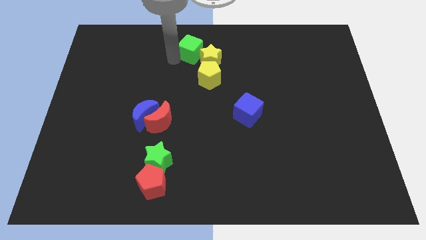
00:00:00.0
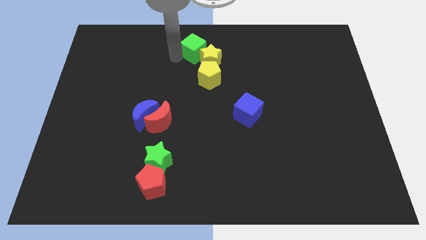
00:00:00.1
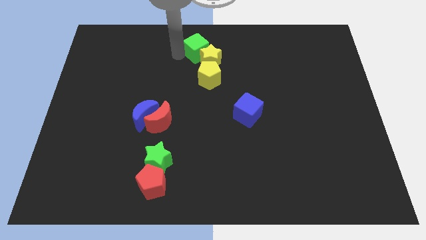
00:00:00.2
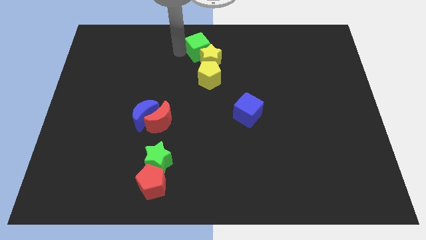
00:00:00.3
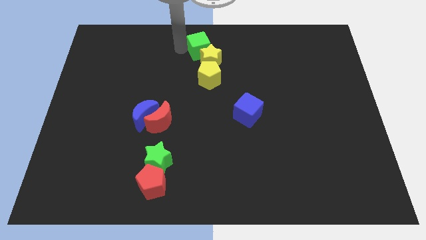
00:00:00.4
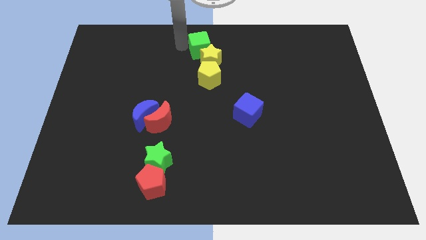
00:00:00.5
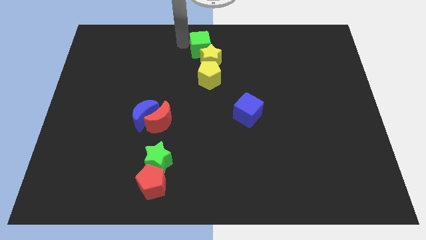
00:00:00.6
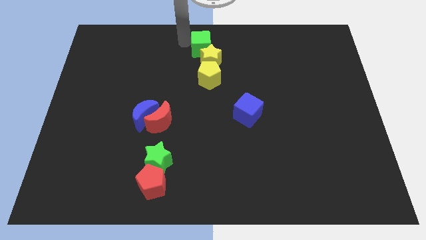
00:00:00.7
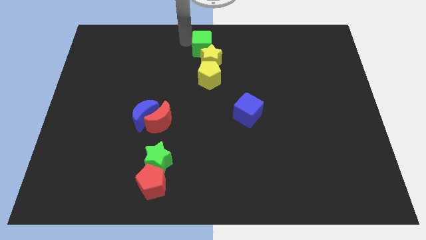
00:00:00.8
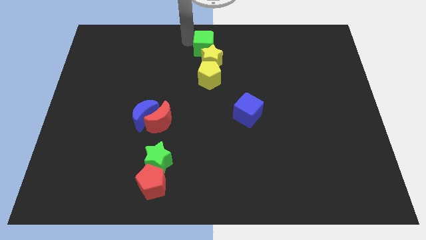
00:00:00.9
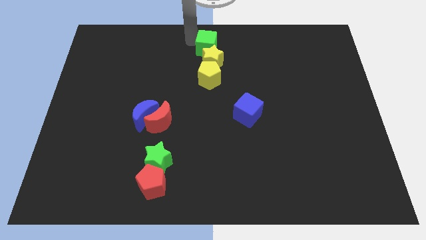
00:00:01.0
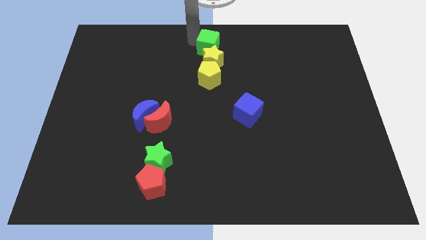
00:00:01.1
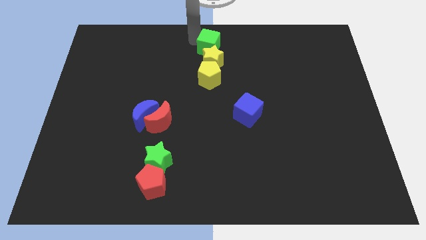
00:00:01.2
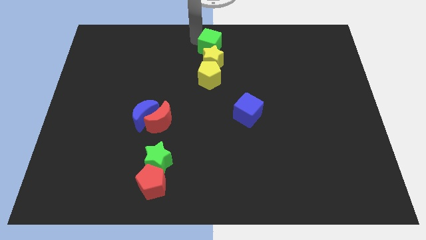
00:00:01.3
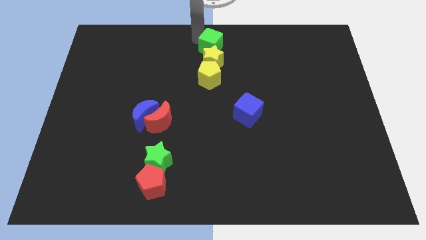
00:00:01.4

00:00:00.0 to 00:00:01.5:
put the green cube above the yellow star

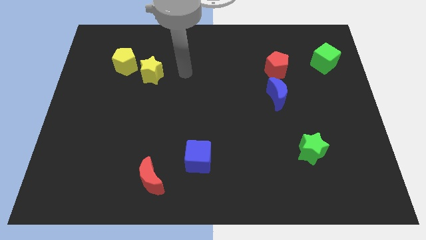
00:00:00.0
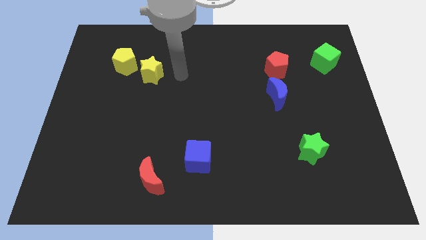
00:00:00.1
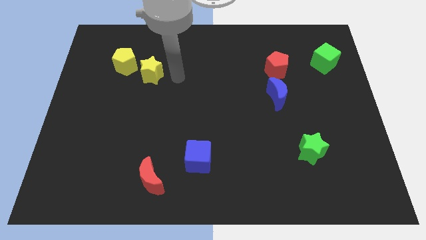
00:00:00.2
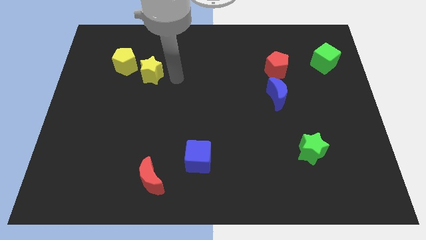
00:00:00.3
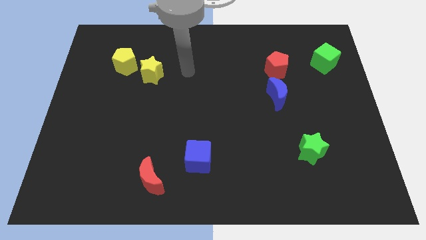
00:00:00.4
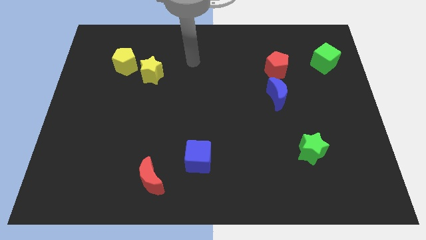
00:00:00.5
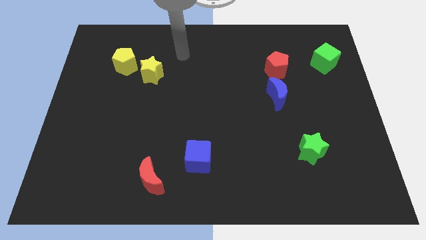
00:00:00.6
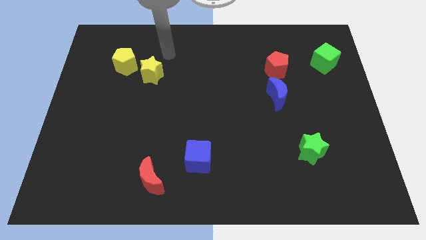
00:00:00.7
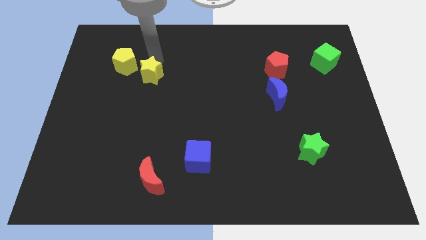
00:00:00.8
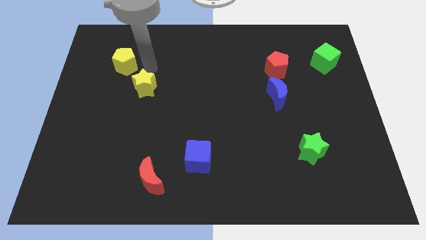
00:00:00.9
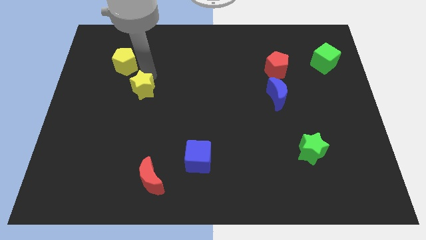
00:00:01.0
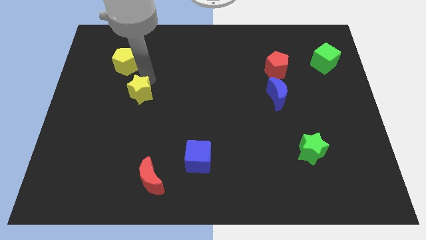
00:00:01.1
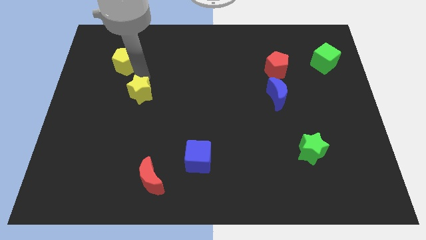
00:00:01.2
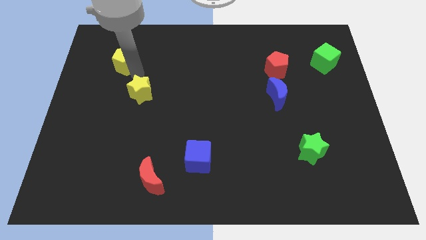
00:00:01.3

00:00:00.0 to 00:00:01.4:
slide the yellow star down slightly

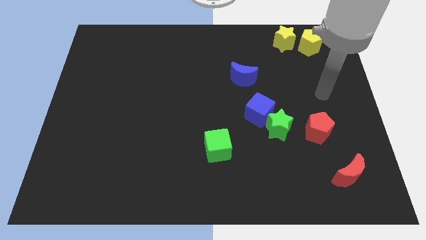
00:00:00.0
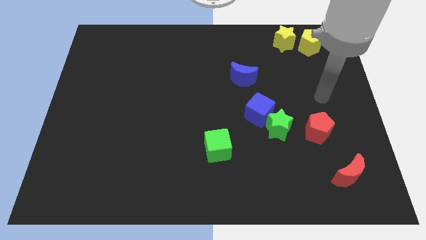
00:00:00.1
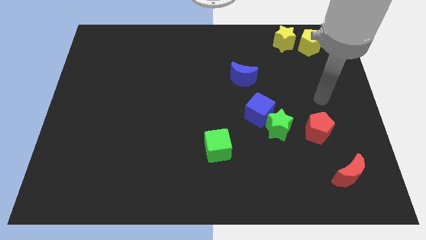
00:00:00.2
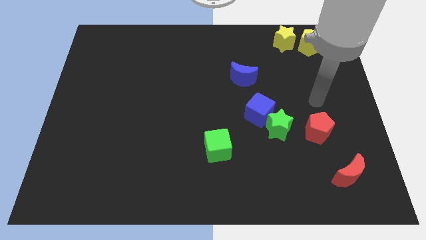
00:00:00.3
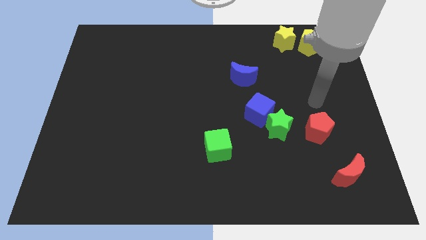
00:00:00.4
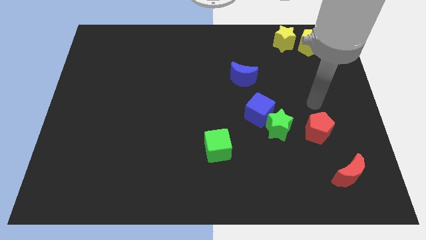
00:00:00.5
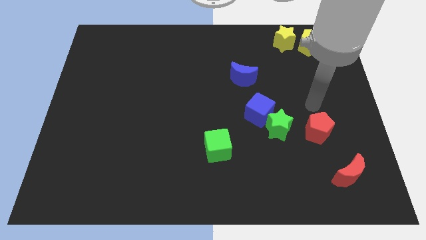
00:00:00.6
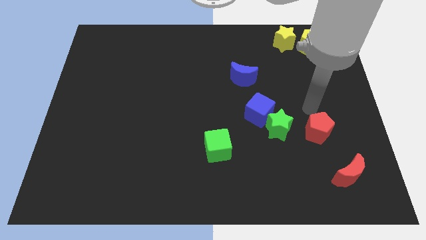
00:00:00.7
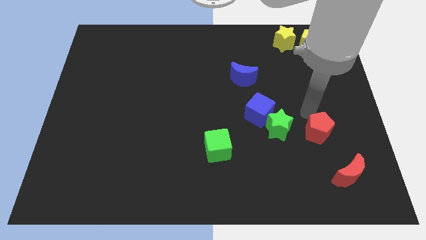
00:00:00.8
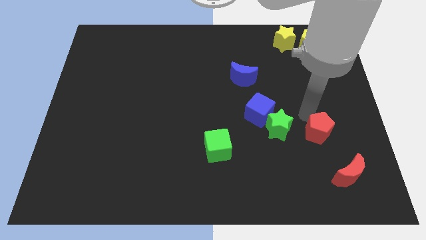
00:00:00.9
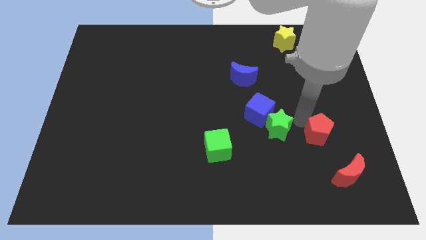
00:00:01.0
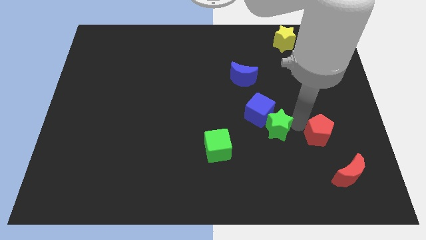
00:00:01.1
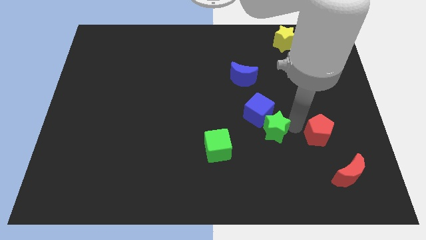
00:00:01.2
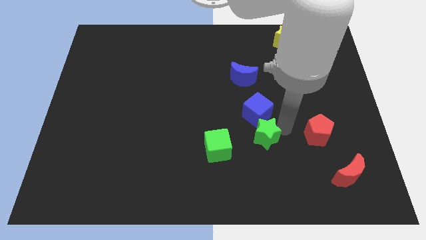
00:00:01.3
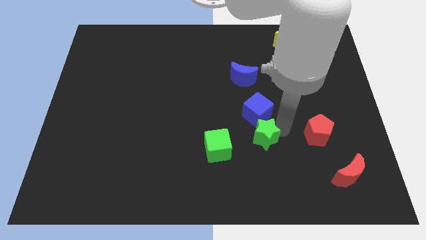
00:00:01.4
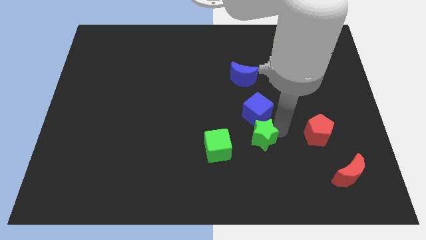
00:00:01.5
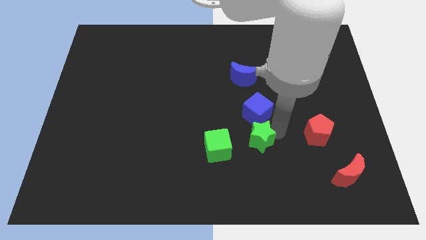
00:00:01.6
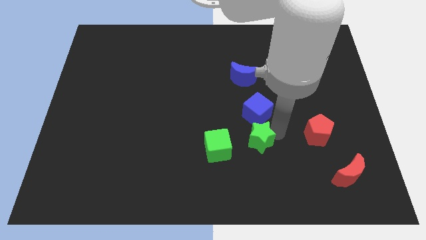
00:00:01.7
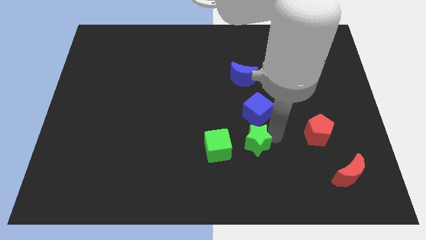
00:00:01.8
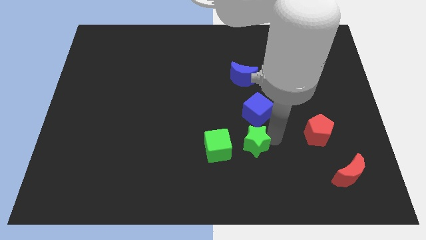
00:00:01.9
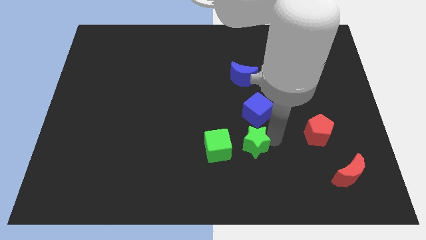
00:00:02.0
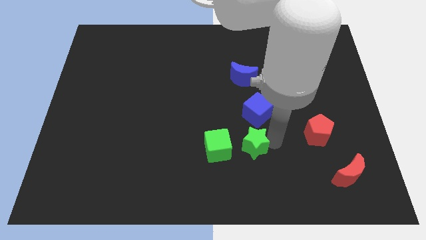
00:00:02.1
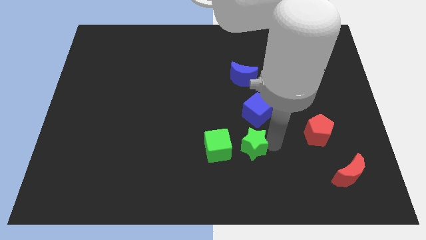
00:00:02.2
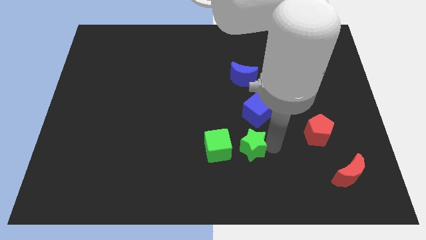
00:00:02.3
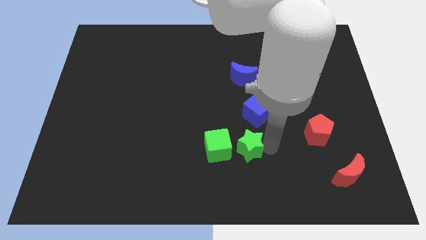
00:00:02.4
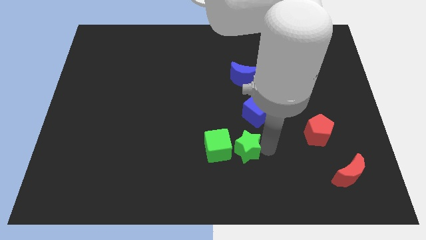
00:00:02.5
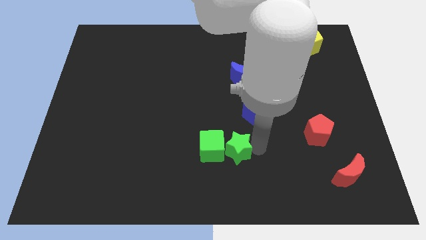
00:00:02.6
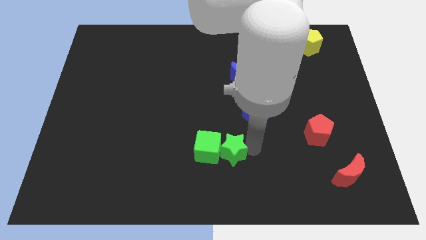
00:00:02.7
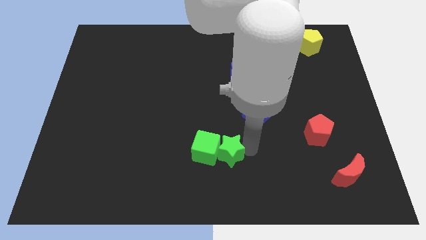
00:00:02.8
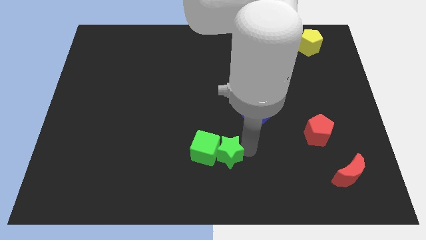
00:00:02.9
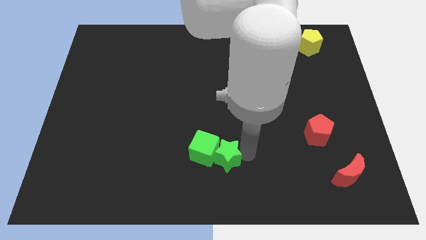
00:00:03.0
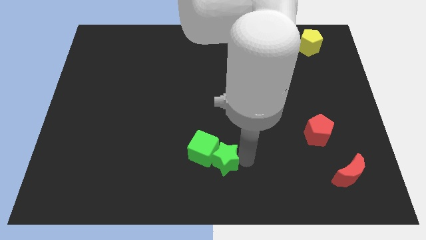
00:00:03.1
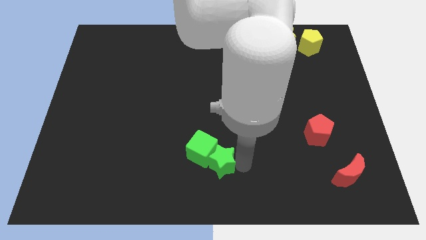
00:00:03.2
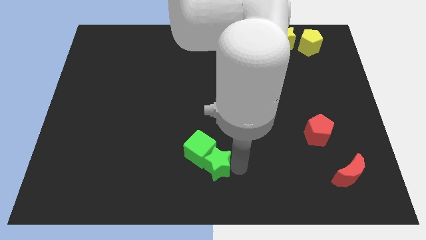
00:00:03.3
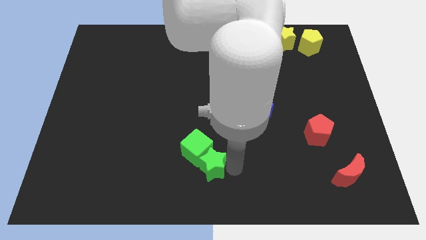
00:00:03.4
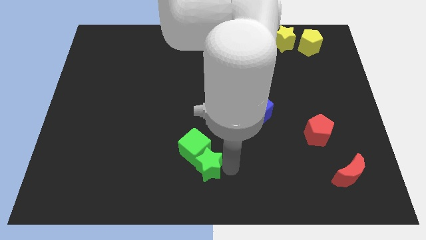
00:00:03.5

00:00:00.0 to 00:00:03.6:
push the green star into the green cube

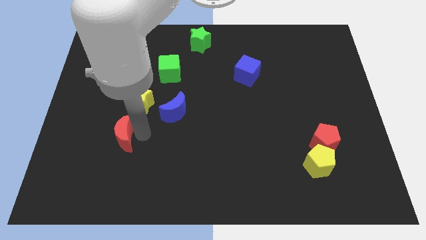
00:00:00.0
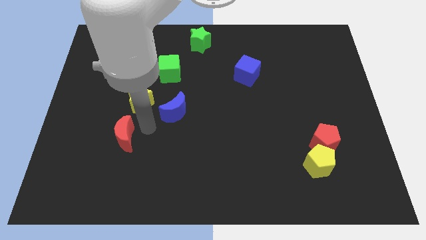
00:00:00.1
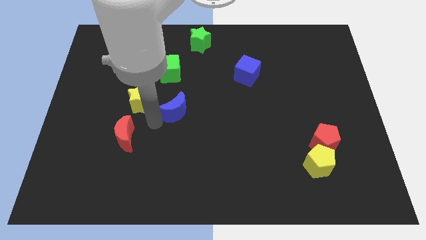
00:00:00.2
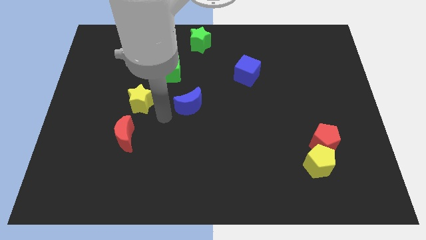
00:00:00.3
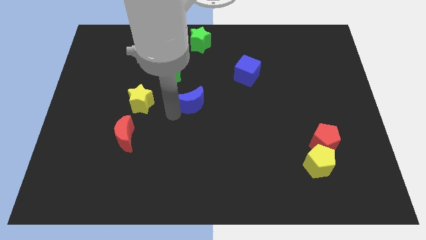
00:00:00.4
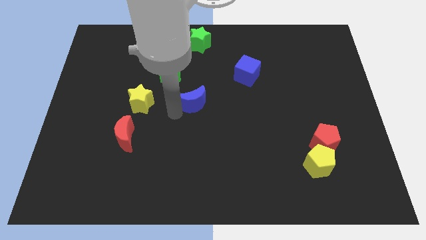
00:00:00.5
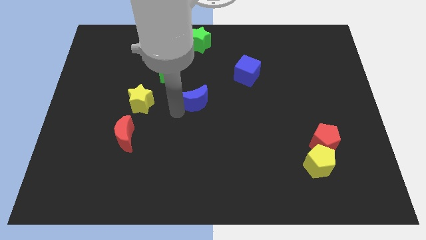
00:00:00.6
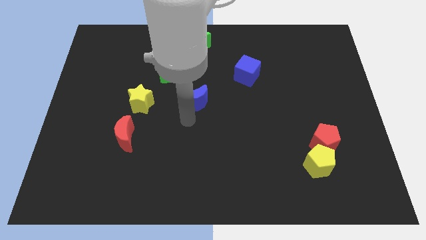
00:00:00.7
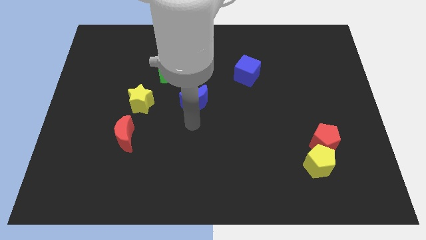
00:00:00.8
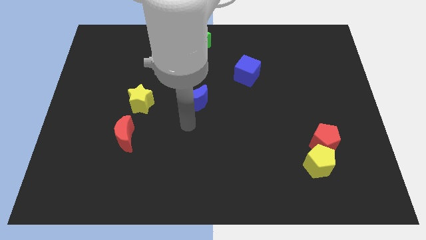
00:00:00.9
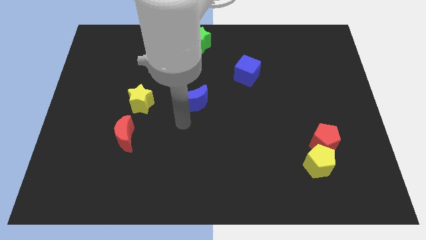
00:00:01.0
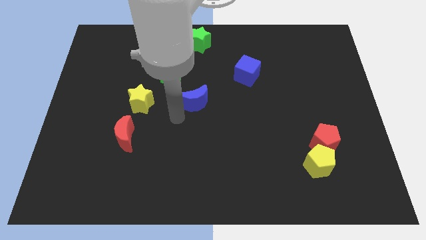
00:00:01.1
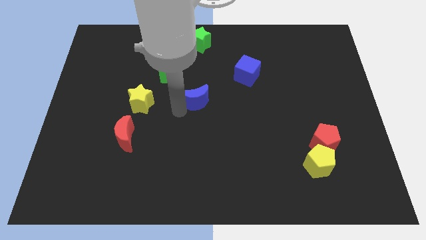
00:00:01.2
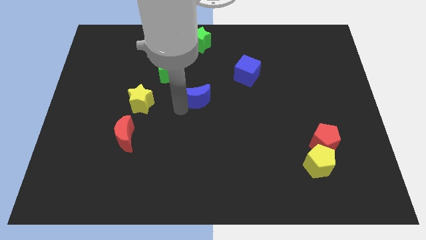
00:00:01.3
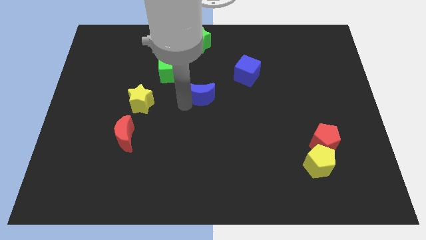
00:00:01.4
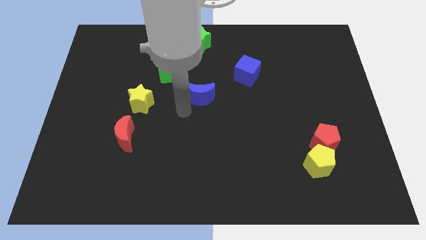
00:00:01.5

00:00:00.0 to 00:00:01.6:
move blue crescent to the center of the board

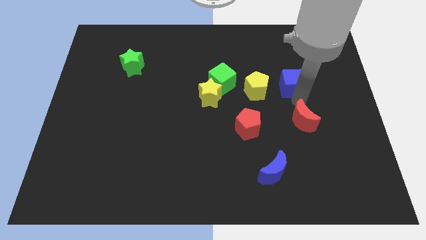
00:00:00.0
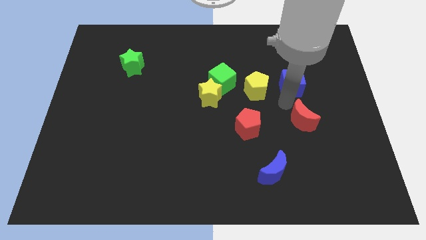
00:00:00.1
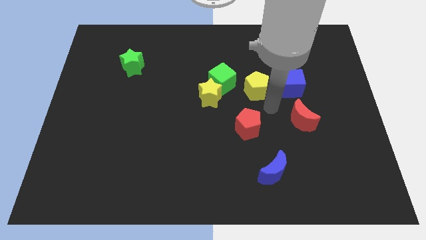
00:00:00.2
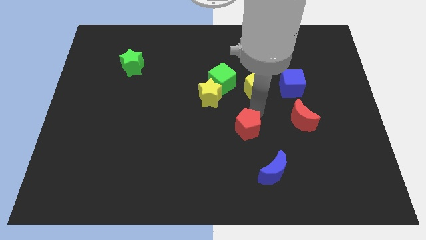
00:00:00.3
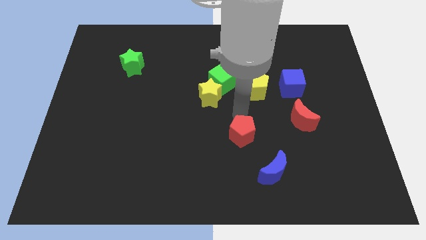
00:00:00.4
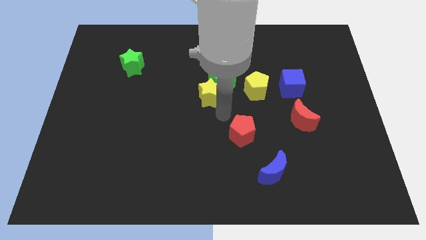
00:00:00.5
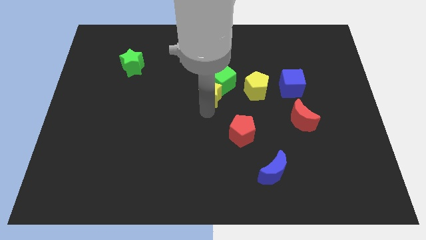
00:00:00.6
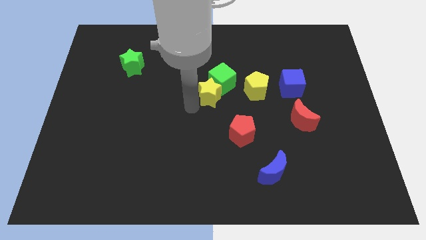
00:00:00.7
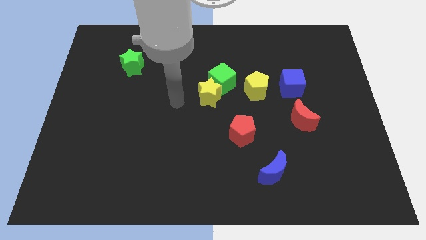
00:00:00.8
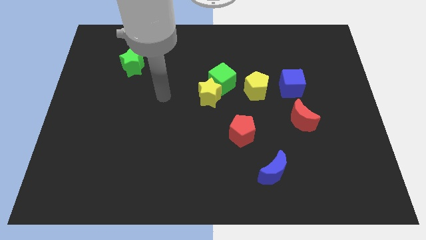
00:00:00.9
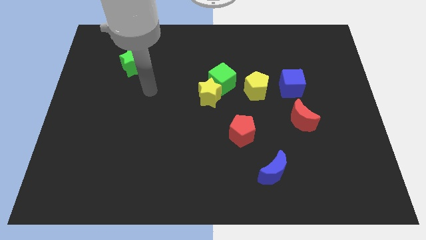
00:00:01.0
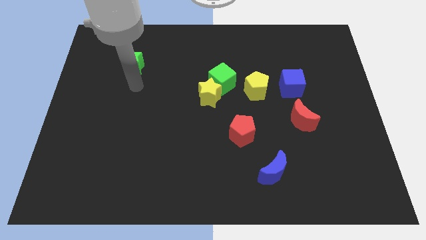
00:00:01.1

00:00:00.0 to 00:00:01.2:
slightly move down the red pentagon
